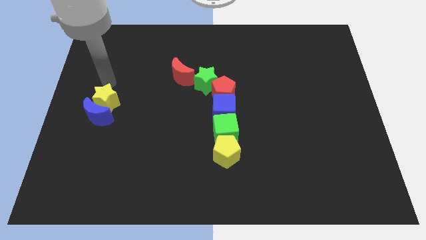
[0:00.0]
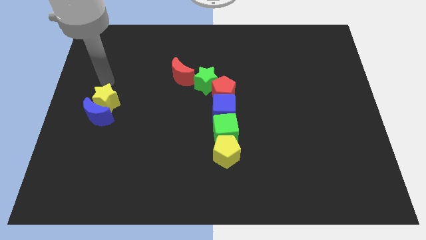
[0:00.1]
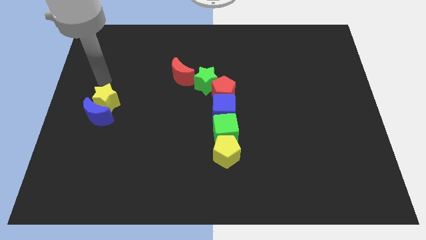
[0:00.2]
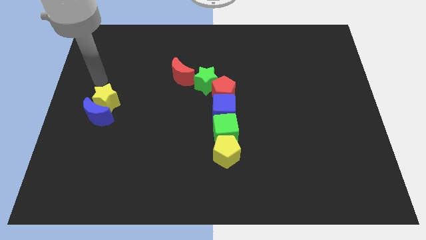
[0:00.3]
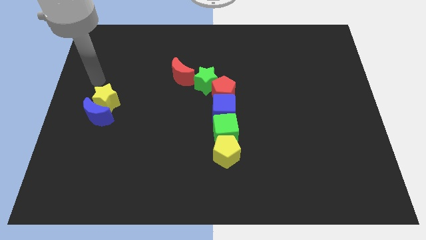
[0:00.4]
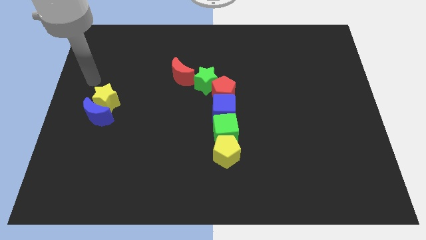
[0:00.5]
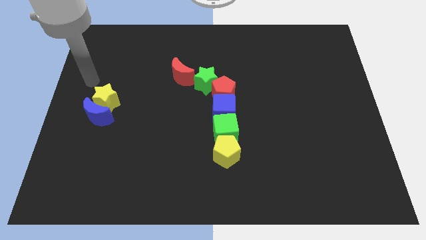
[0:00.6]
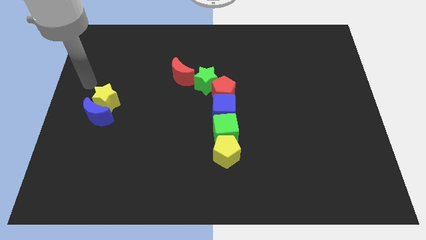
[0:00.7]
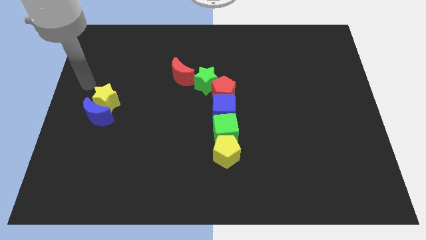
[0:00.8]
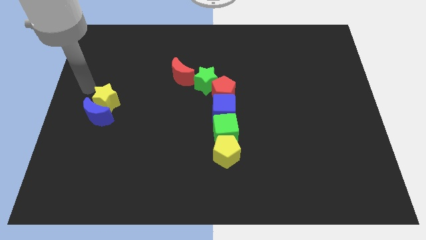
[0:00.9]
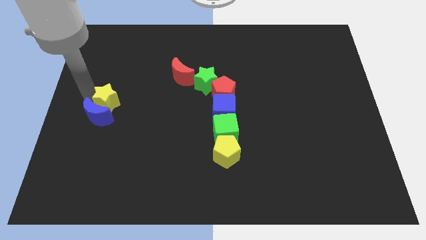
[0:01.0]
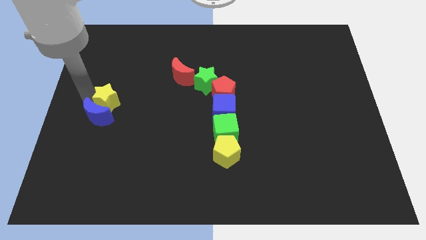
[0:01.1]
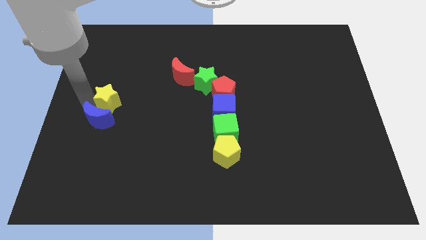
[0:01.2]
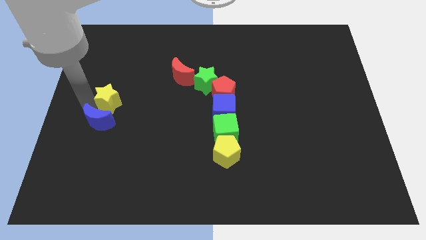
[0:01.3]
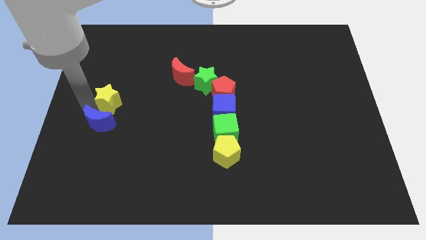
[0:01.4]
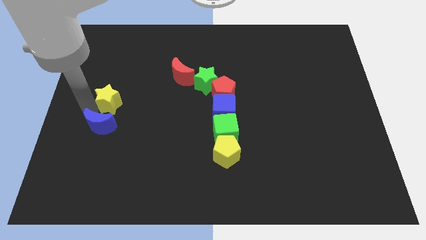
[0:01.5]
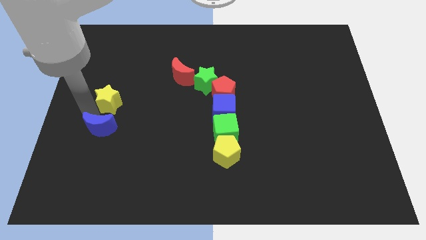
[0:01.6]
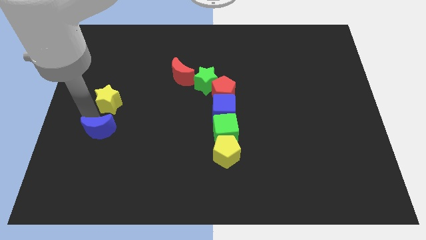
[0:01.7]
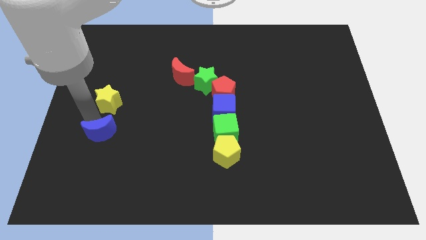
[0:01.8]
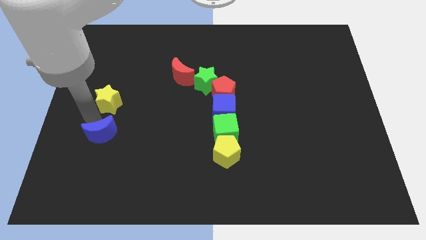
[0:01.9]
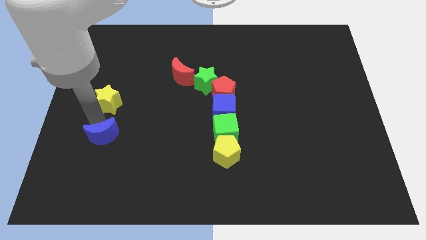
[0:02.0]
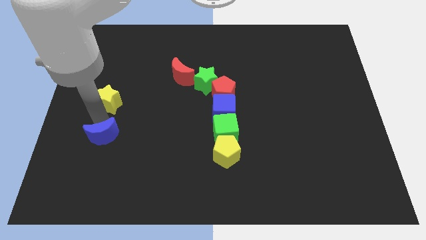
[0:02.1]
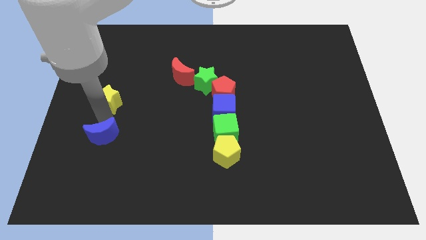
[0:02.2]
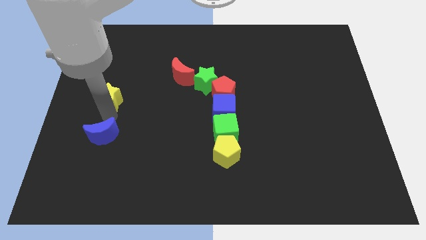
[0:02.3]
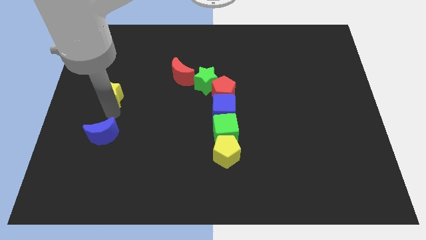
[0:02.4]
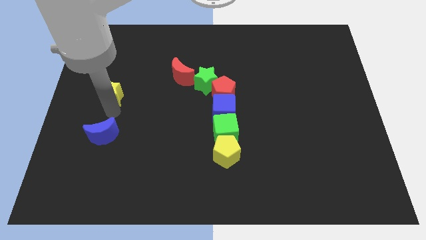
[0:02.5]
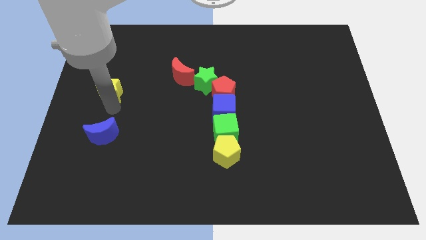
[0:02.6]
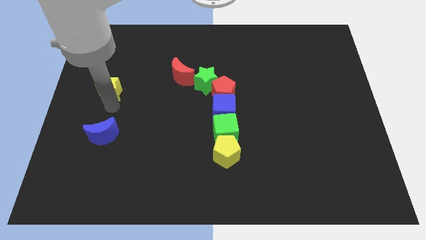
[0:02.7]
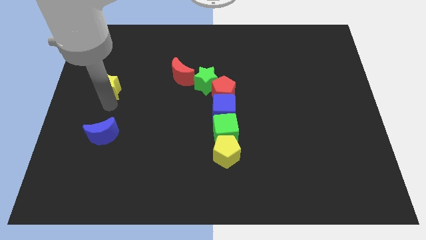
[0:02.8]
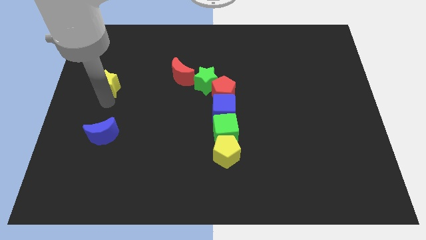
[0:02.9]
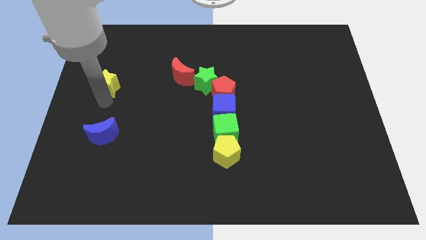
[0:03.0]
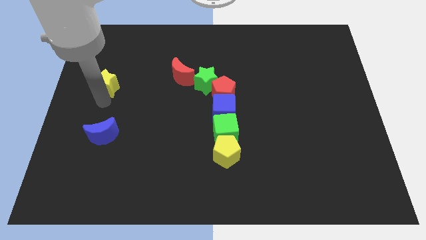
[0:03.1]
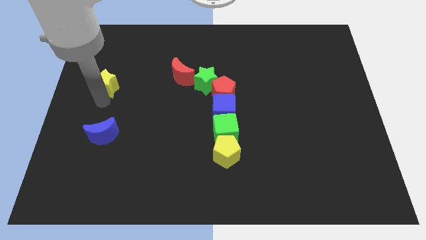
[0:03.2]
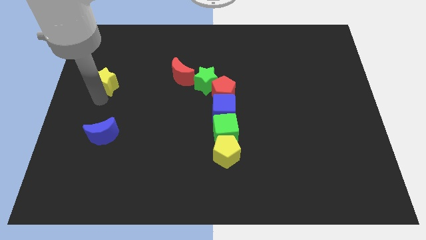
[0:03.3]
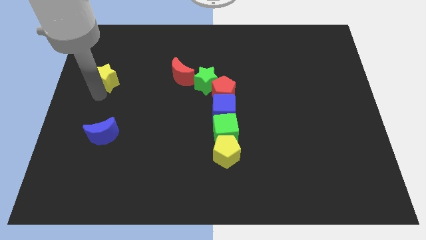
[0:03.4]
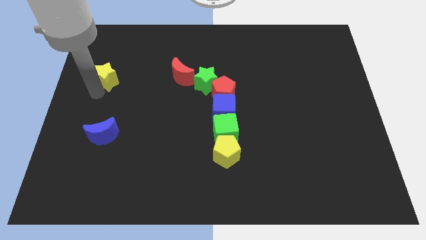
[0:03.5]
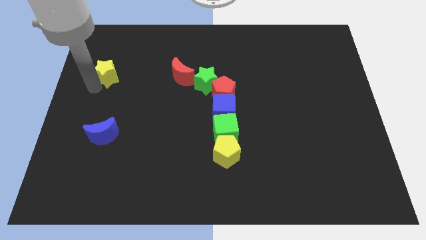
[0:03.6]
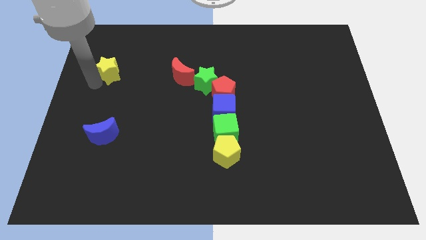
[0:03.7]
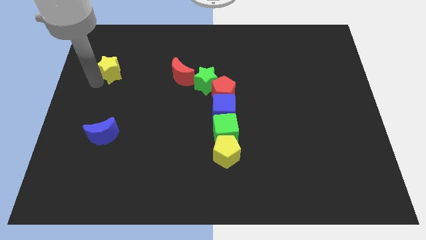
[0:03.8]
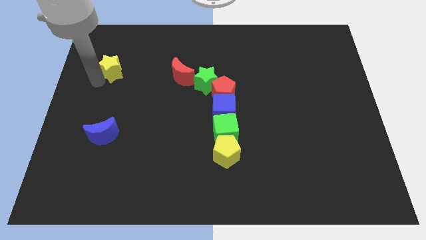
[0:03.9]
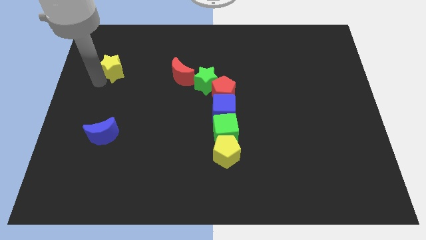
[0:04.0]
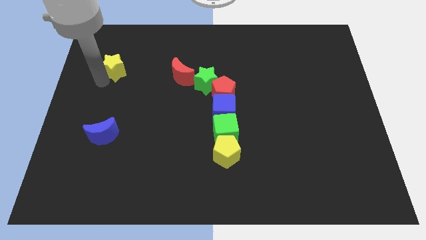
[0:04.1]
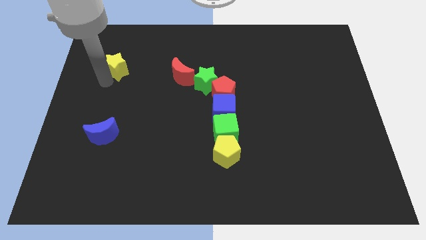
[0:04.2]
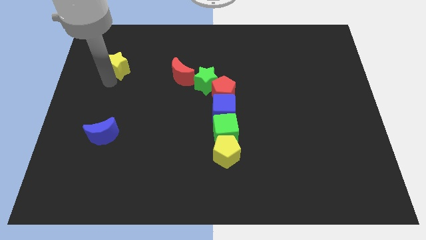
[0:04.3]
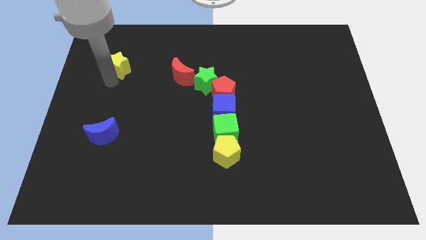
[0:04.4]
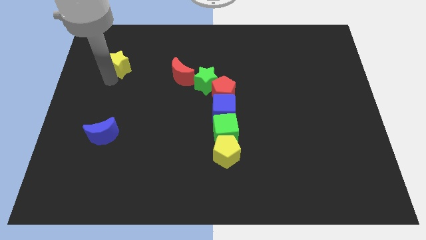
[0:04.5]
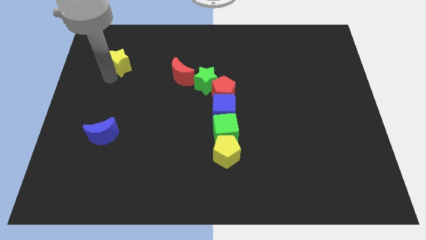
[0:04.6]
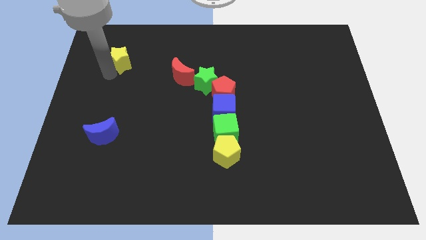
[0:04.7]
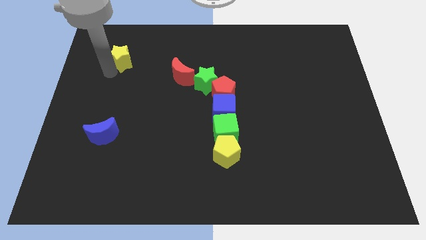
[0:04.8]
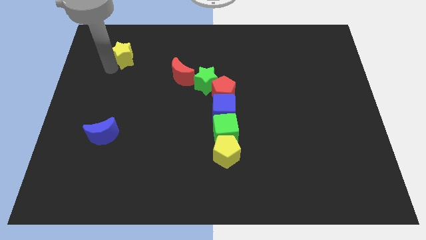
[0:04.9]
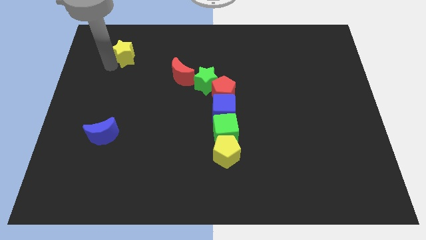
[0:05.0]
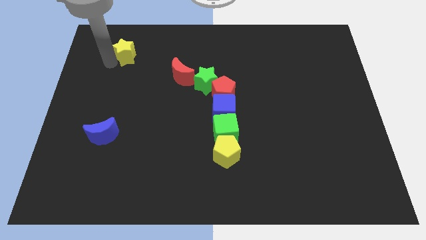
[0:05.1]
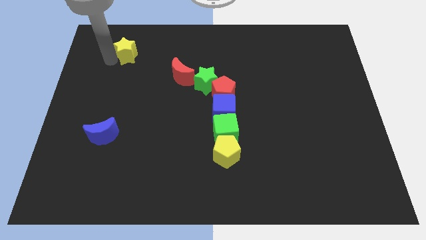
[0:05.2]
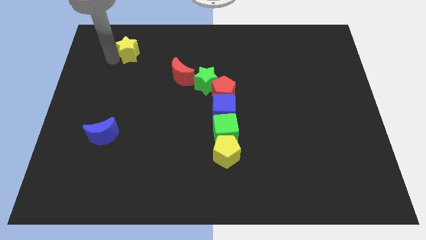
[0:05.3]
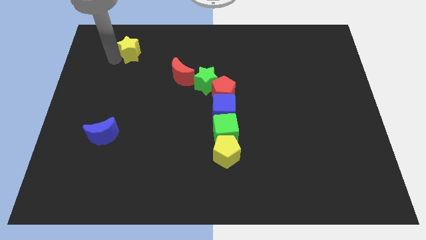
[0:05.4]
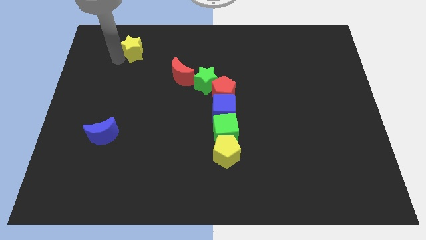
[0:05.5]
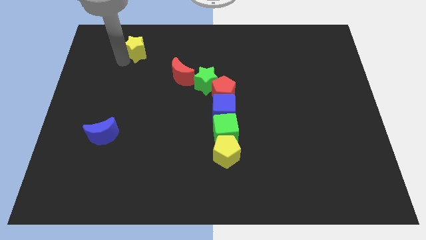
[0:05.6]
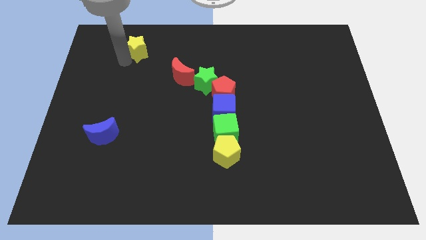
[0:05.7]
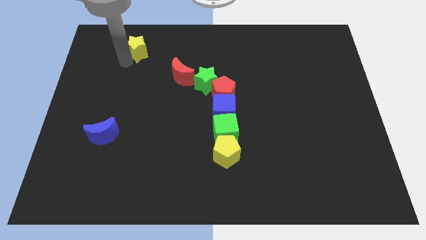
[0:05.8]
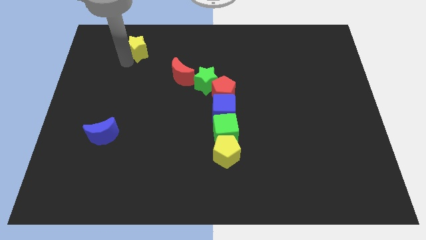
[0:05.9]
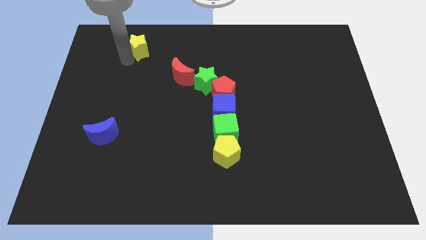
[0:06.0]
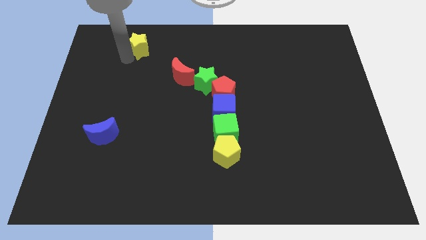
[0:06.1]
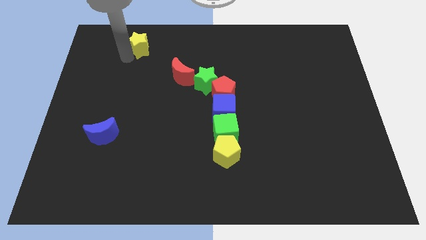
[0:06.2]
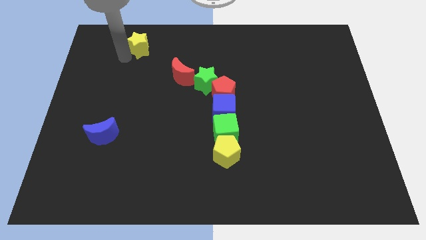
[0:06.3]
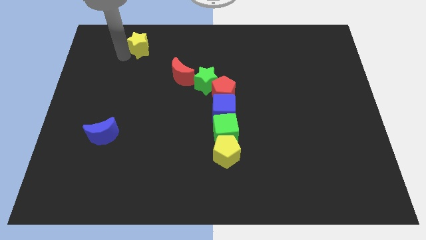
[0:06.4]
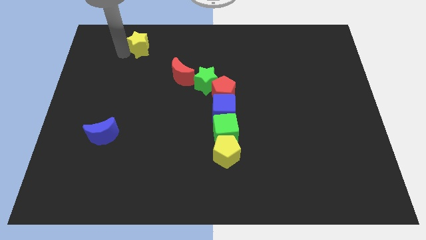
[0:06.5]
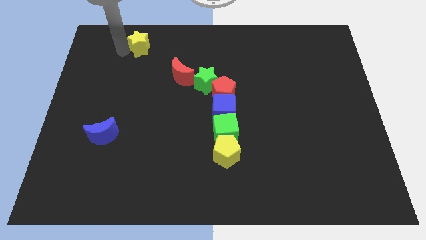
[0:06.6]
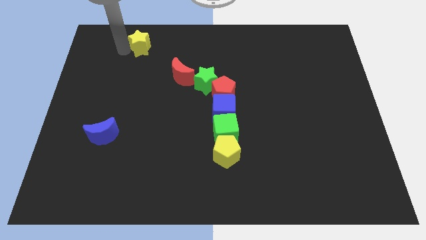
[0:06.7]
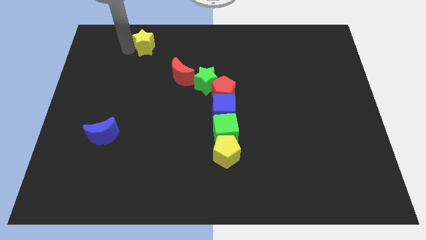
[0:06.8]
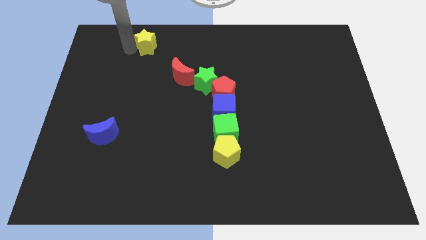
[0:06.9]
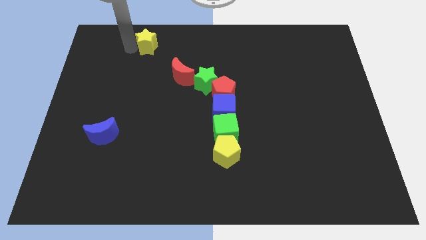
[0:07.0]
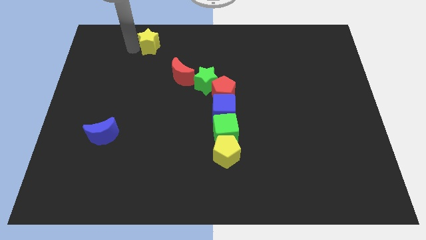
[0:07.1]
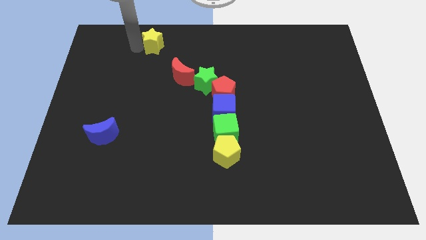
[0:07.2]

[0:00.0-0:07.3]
separate the yellow star from the blue semicircle

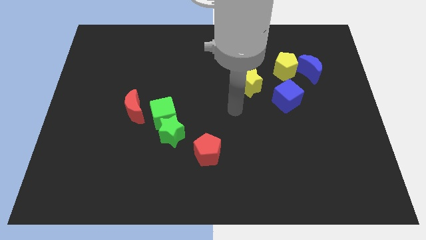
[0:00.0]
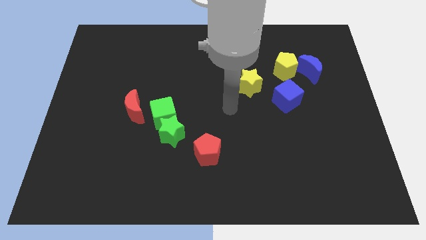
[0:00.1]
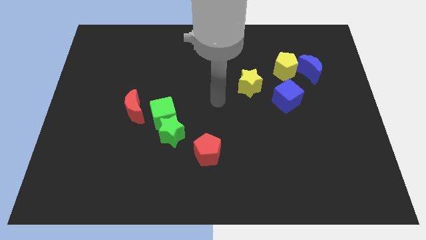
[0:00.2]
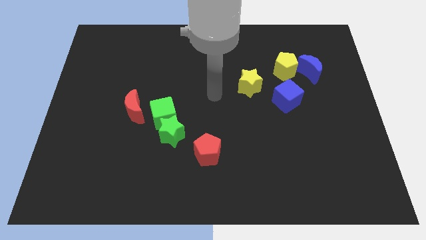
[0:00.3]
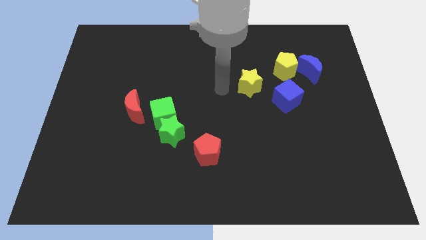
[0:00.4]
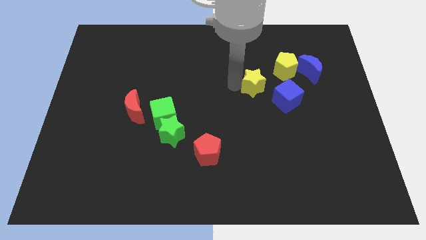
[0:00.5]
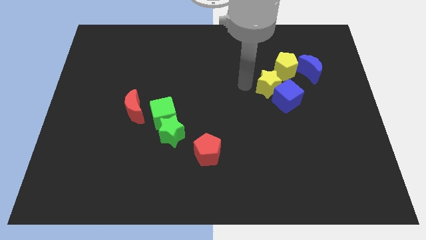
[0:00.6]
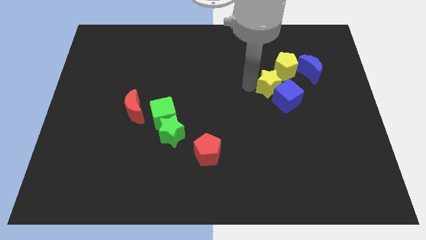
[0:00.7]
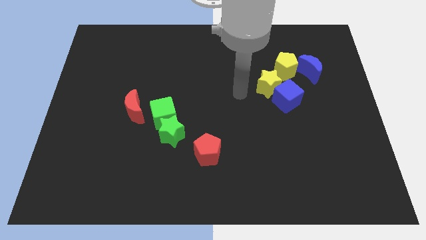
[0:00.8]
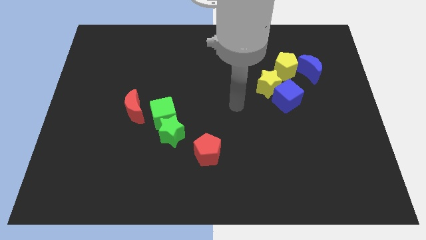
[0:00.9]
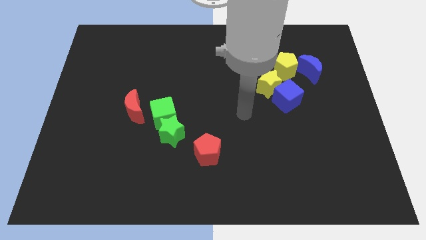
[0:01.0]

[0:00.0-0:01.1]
move the yellow star into blue cube

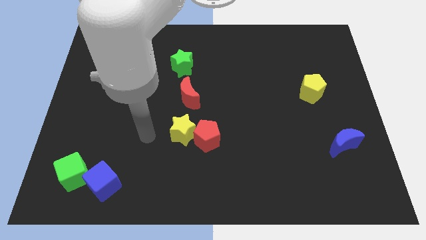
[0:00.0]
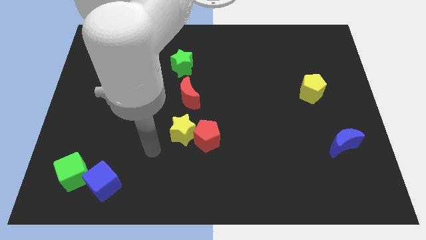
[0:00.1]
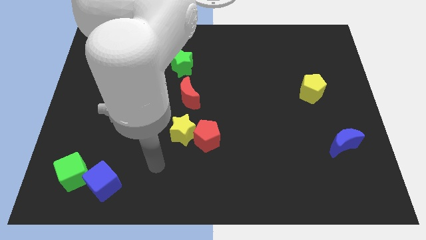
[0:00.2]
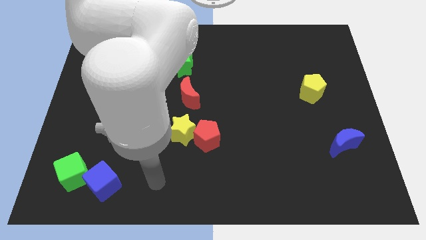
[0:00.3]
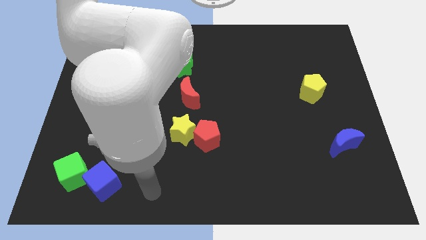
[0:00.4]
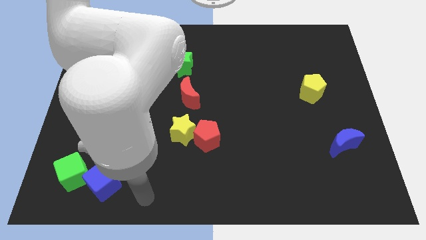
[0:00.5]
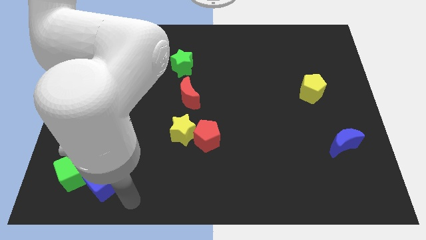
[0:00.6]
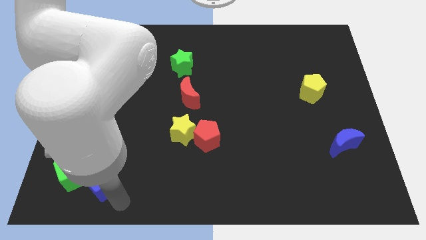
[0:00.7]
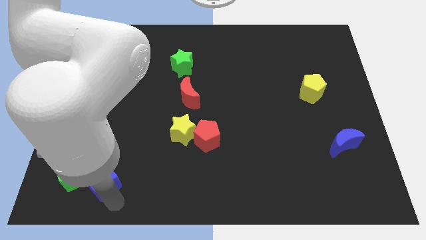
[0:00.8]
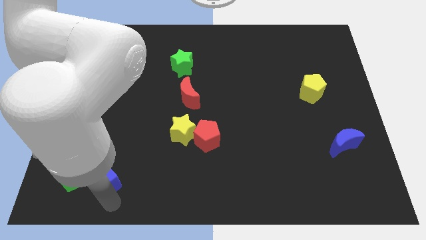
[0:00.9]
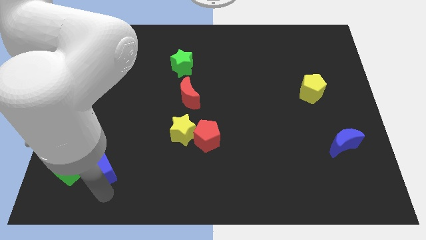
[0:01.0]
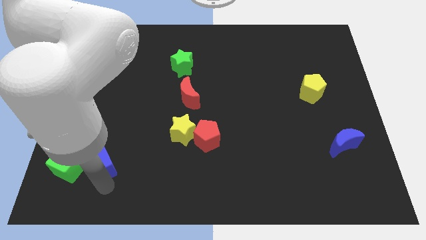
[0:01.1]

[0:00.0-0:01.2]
touch the bottom of blue cube
